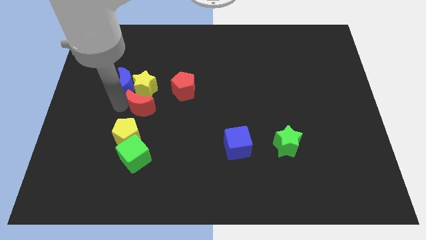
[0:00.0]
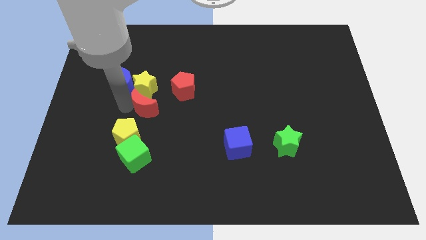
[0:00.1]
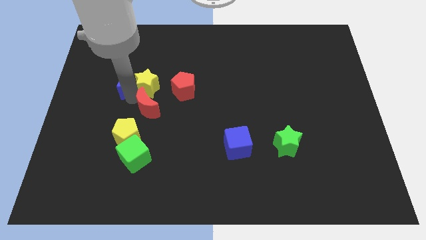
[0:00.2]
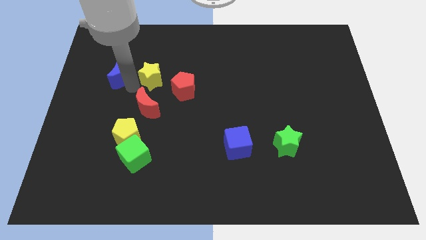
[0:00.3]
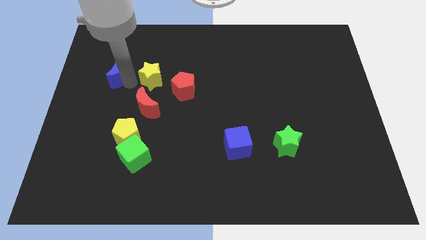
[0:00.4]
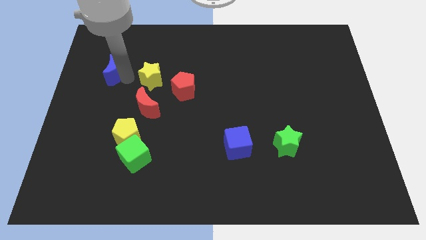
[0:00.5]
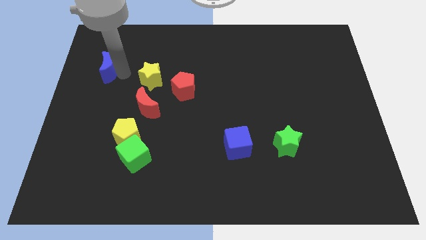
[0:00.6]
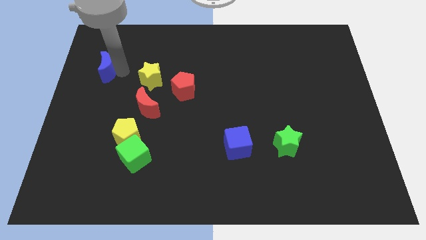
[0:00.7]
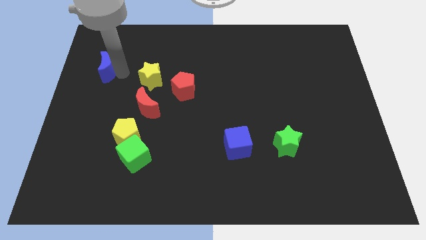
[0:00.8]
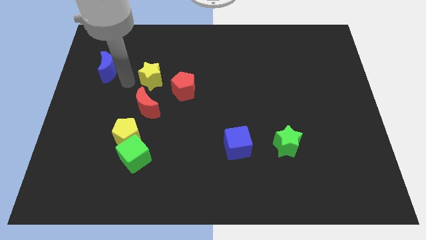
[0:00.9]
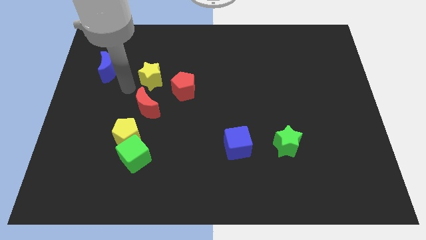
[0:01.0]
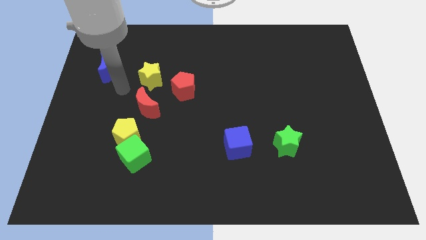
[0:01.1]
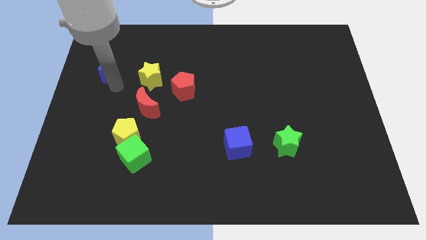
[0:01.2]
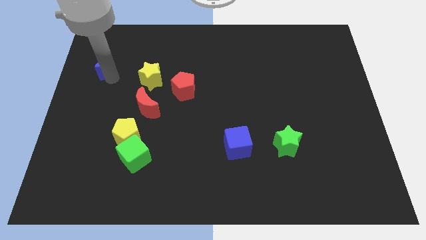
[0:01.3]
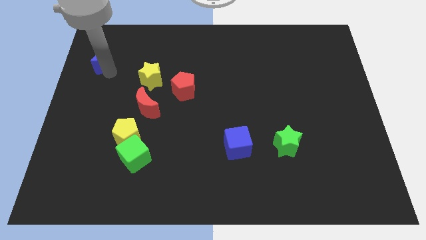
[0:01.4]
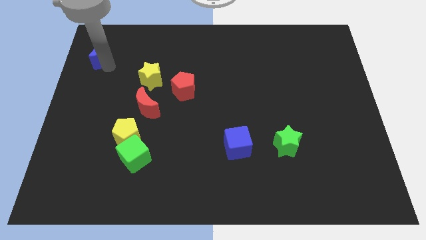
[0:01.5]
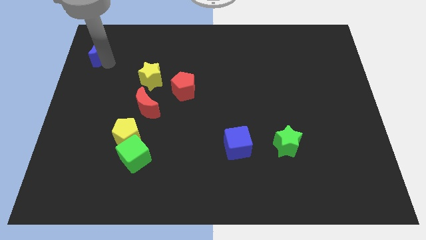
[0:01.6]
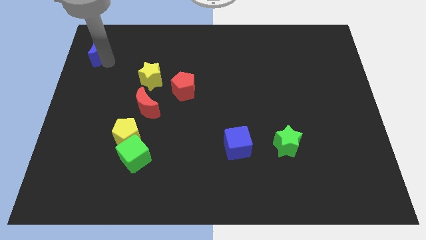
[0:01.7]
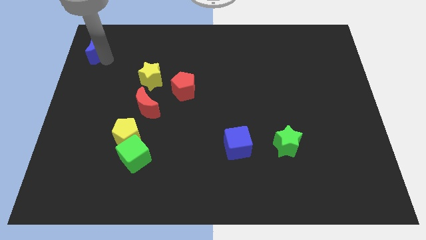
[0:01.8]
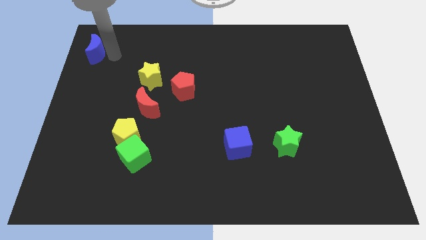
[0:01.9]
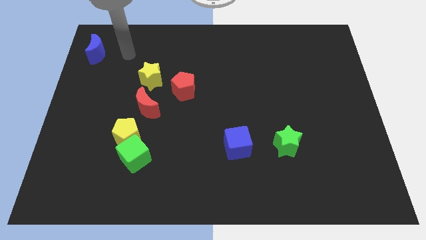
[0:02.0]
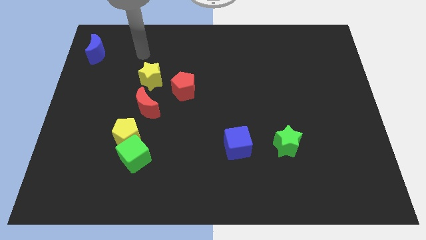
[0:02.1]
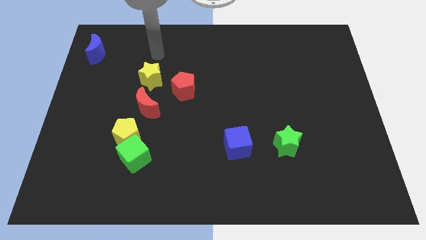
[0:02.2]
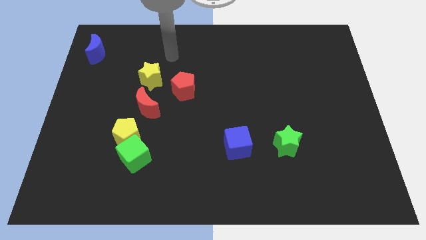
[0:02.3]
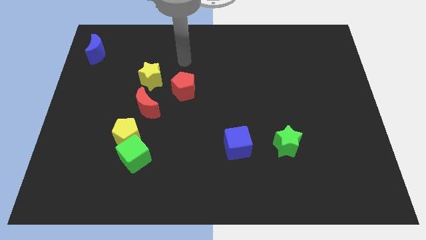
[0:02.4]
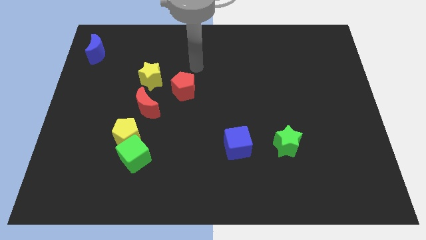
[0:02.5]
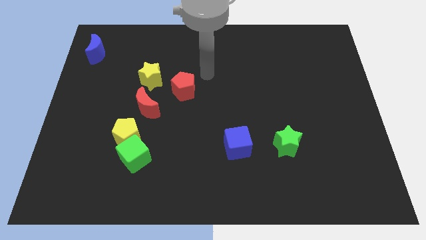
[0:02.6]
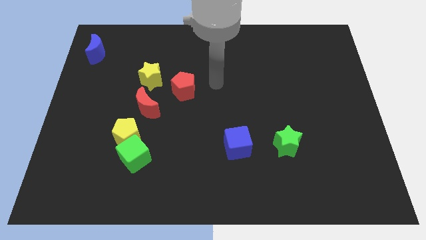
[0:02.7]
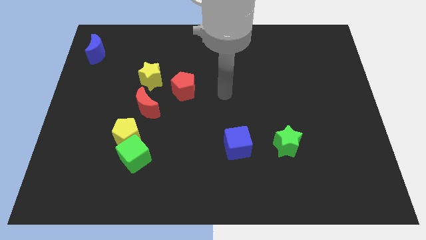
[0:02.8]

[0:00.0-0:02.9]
separate blue moon from yellow star

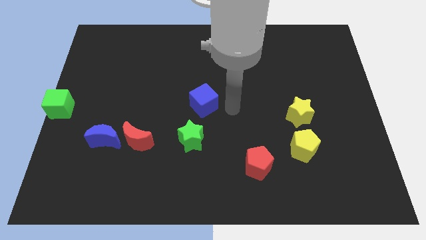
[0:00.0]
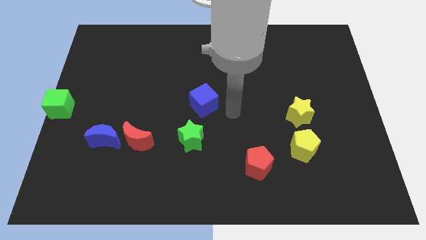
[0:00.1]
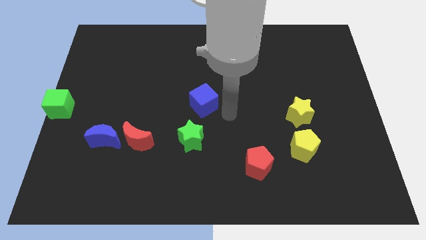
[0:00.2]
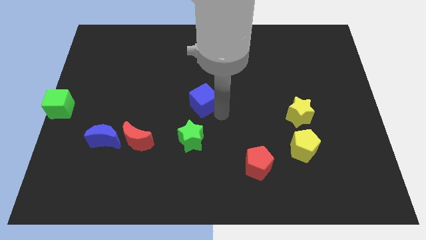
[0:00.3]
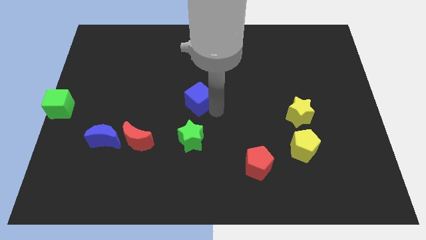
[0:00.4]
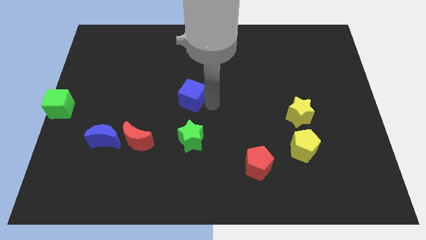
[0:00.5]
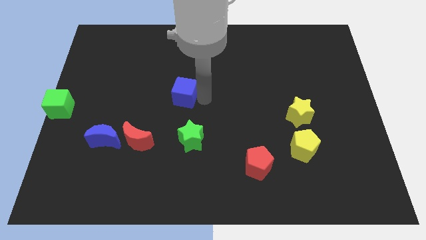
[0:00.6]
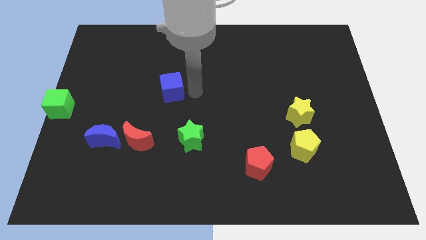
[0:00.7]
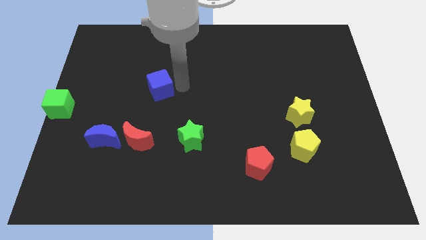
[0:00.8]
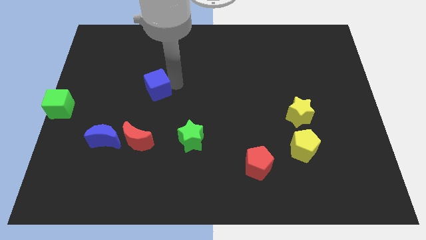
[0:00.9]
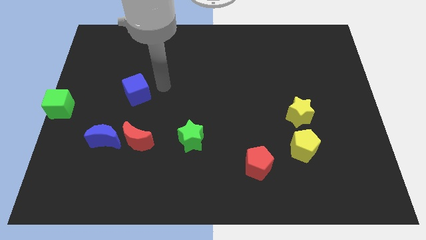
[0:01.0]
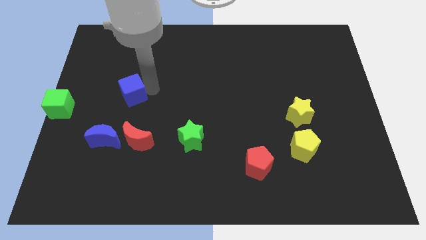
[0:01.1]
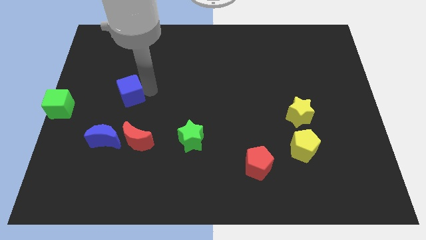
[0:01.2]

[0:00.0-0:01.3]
push the blue cube to the top of the red crescent

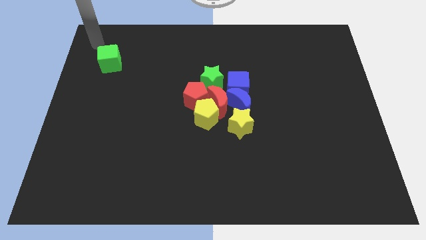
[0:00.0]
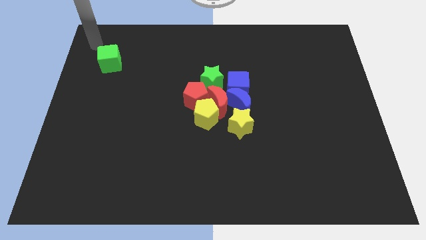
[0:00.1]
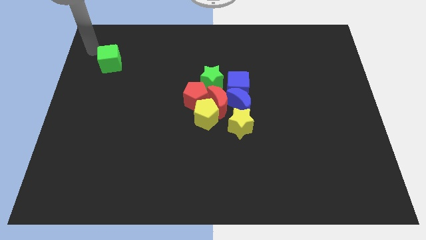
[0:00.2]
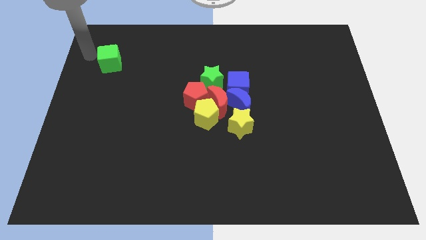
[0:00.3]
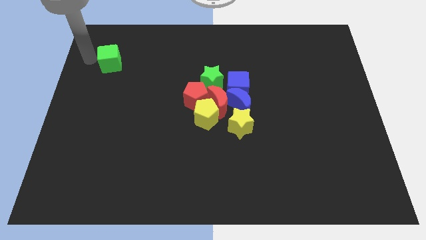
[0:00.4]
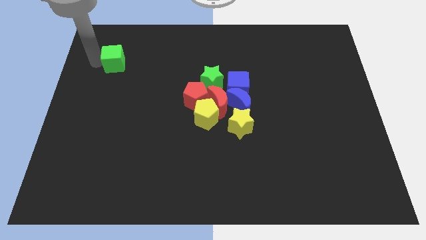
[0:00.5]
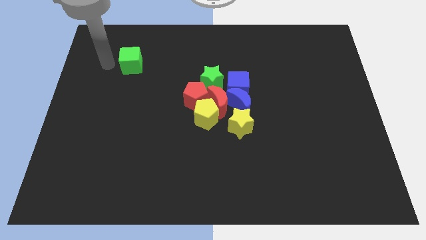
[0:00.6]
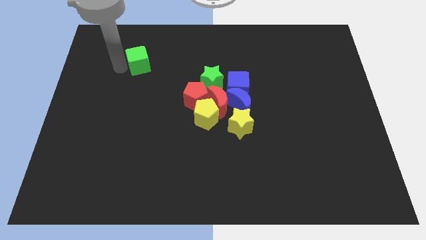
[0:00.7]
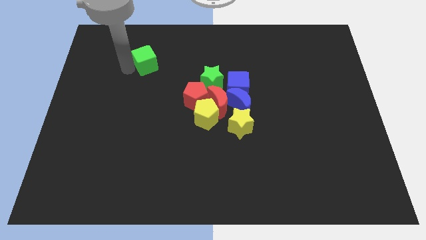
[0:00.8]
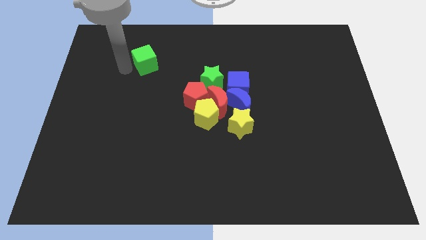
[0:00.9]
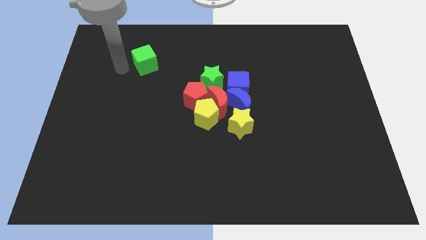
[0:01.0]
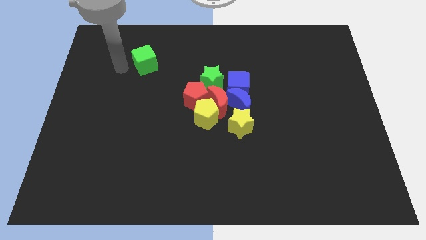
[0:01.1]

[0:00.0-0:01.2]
push the green cube slightly to the right of the board

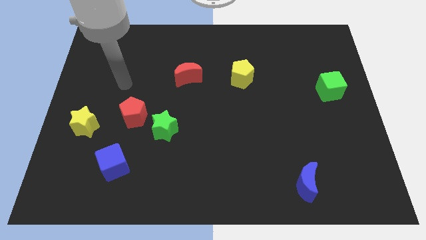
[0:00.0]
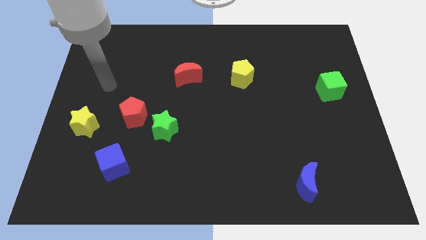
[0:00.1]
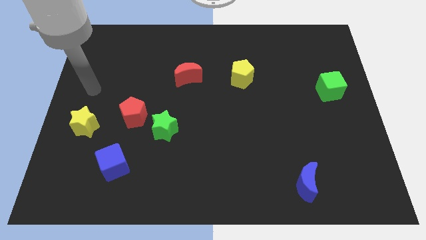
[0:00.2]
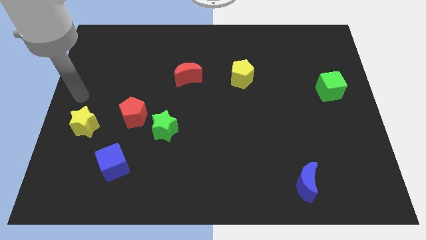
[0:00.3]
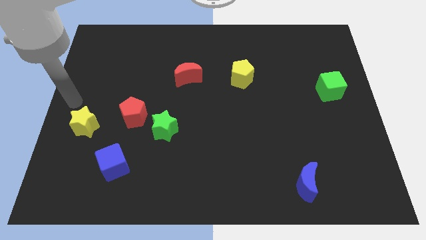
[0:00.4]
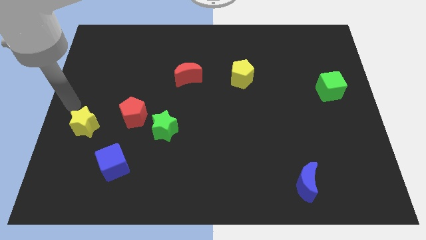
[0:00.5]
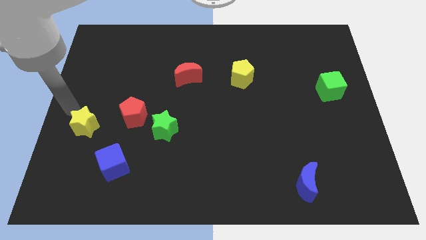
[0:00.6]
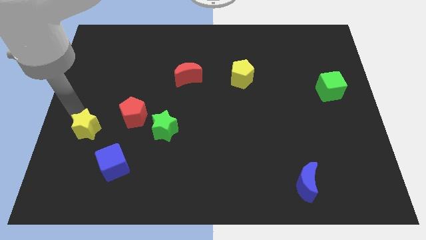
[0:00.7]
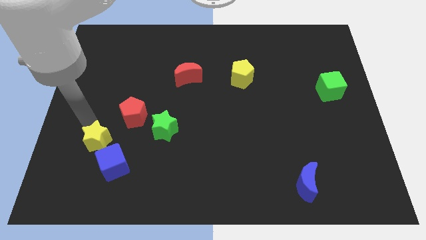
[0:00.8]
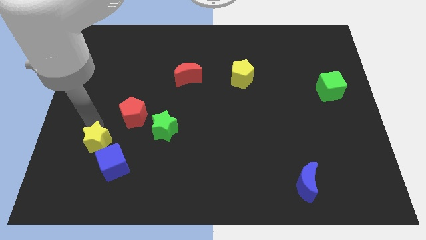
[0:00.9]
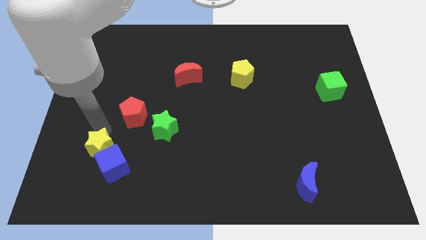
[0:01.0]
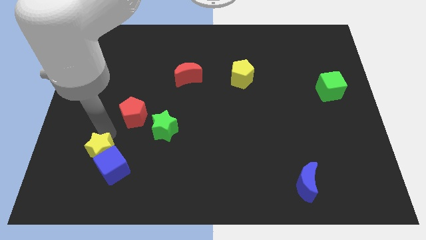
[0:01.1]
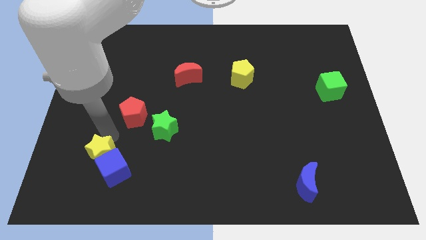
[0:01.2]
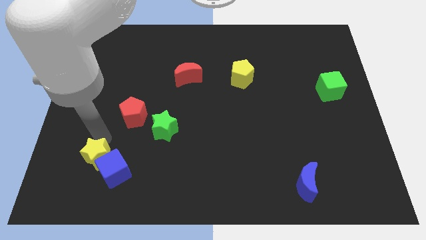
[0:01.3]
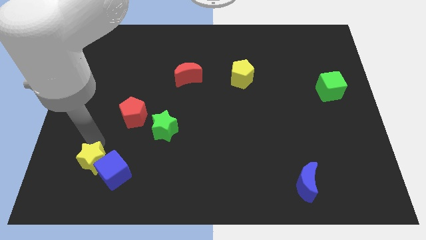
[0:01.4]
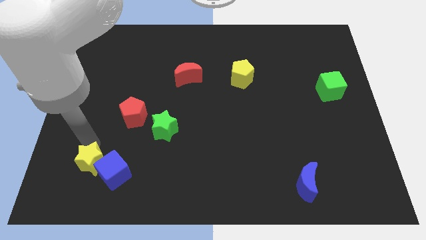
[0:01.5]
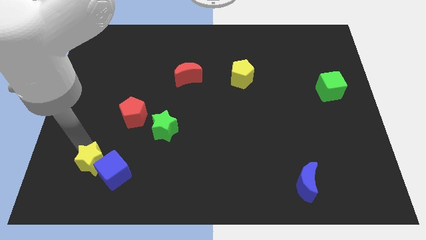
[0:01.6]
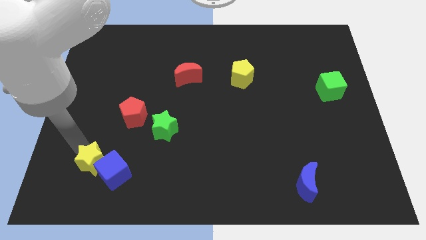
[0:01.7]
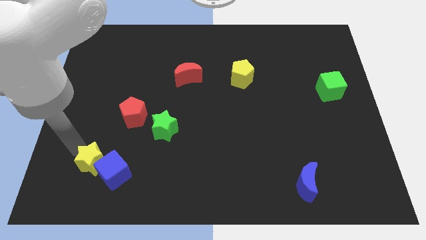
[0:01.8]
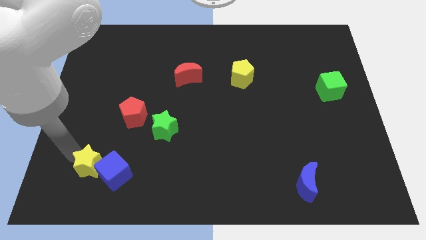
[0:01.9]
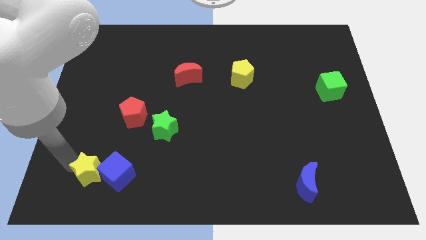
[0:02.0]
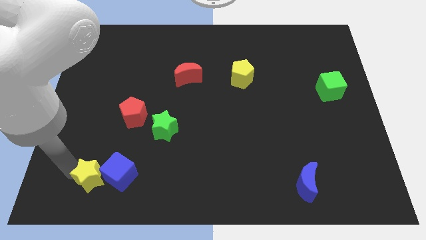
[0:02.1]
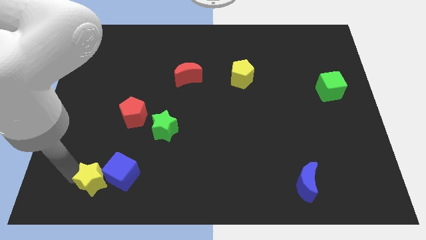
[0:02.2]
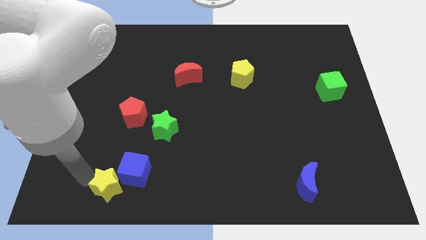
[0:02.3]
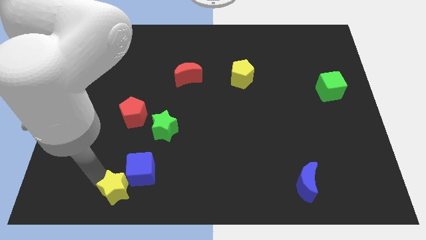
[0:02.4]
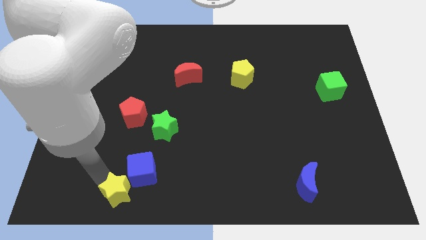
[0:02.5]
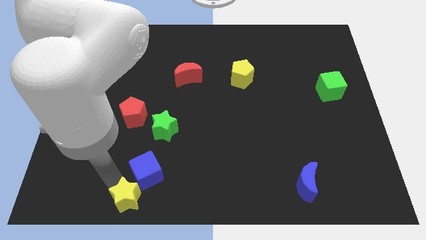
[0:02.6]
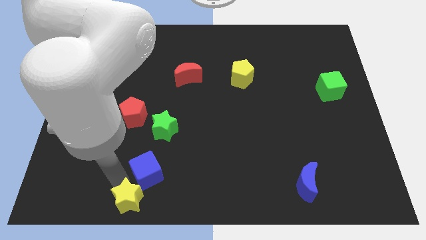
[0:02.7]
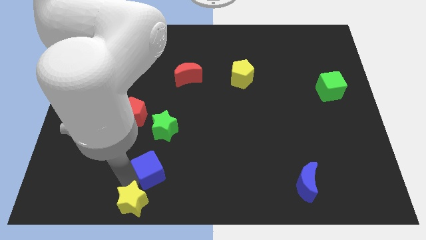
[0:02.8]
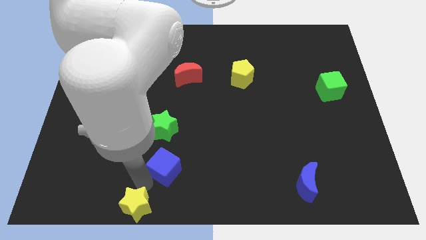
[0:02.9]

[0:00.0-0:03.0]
push the yellow star to the bottom of the blue cube

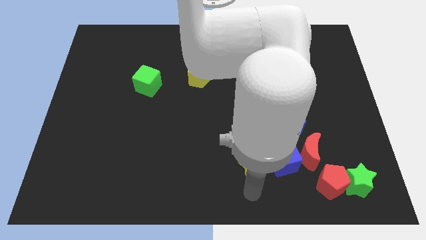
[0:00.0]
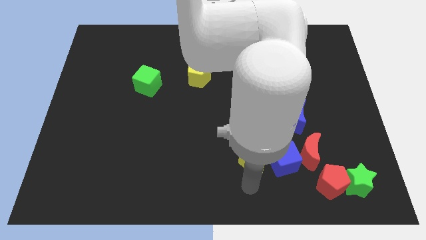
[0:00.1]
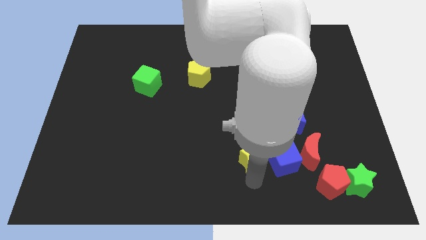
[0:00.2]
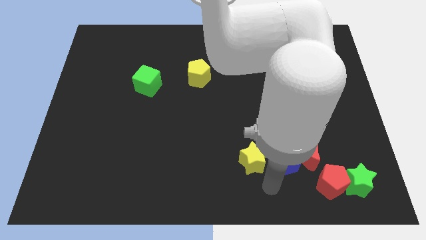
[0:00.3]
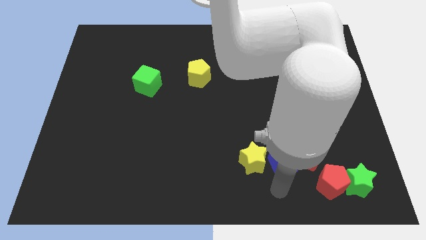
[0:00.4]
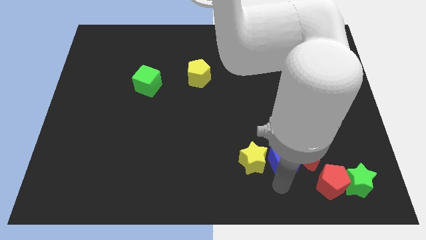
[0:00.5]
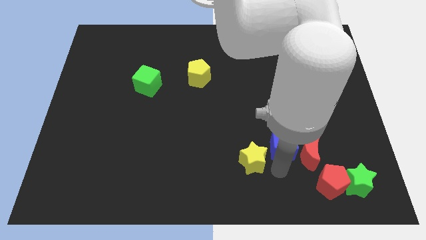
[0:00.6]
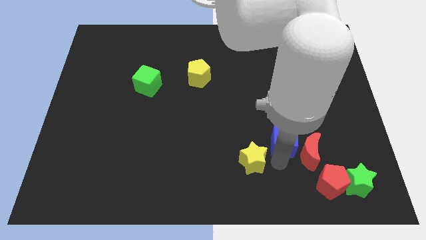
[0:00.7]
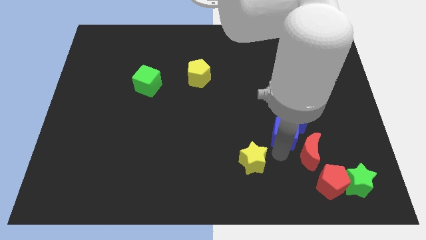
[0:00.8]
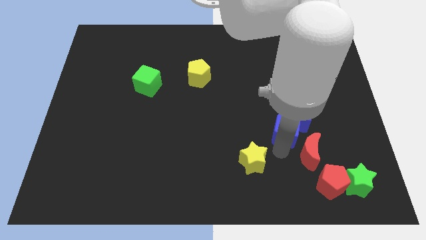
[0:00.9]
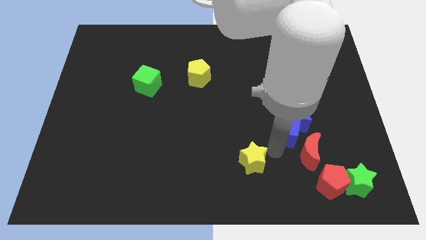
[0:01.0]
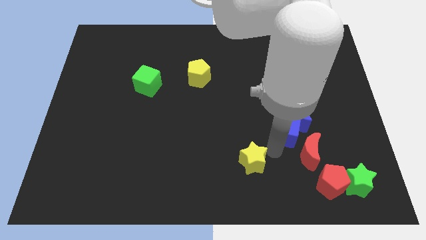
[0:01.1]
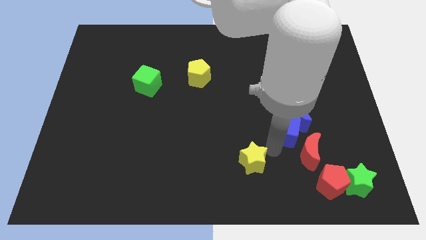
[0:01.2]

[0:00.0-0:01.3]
move the blue cube into the blue crescent
